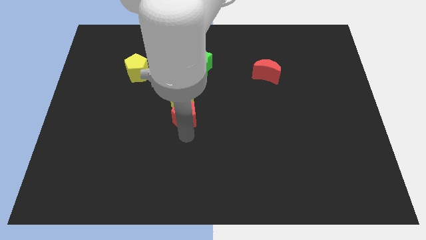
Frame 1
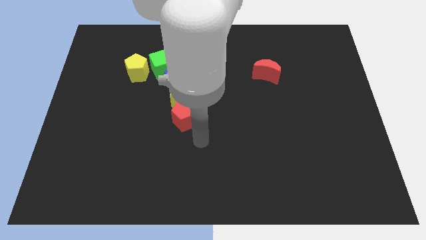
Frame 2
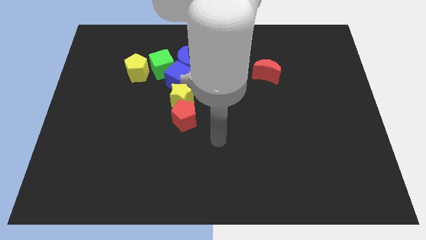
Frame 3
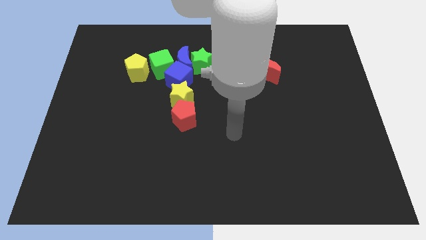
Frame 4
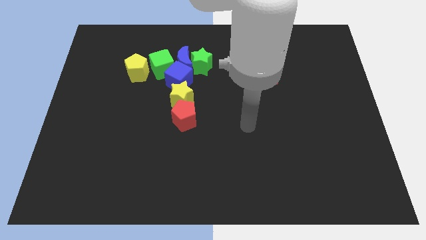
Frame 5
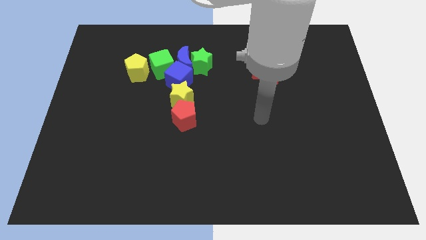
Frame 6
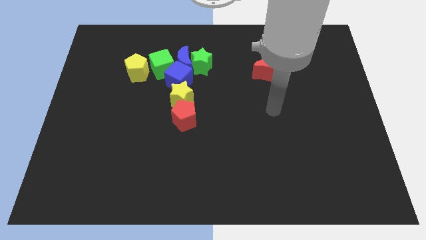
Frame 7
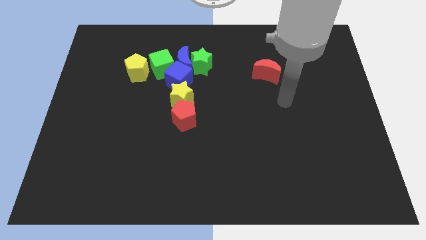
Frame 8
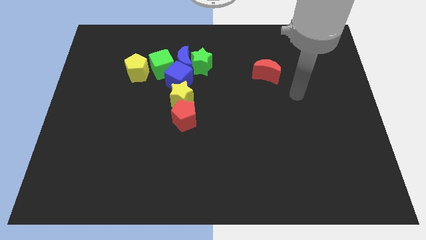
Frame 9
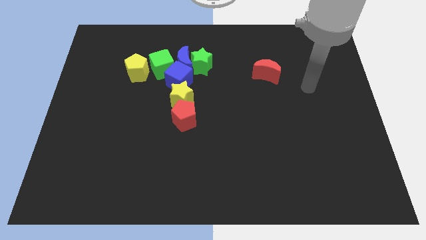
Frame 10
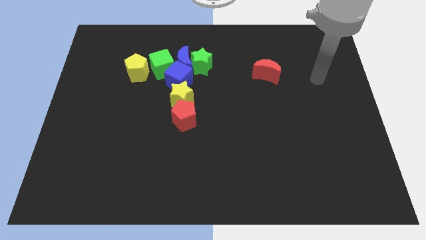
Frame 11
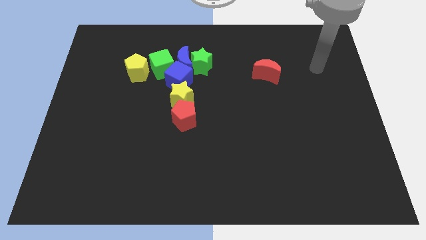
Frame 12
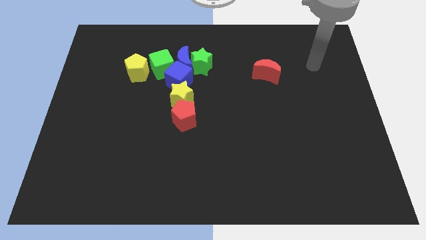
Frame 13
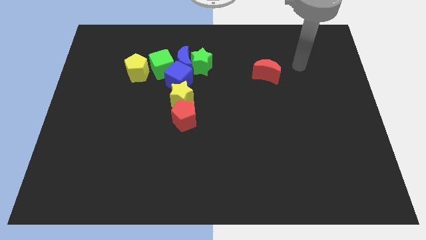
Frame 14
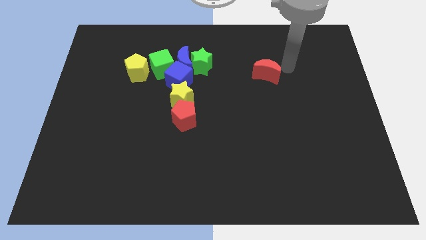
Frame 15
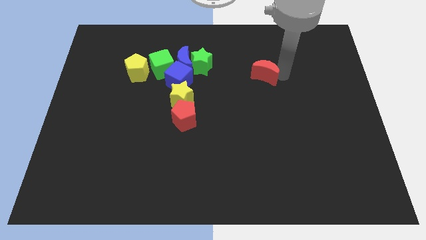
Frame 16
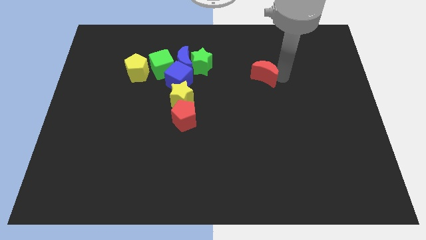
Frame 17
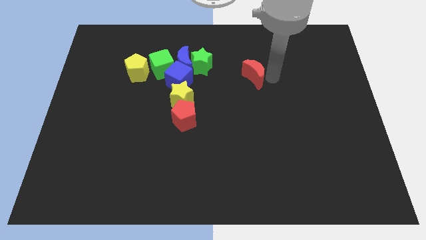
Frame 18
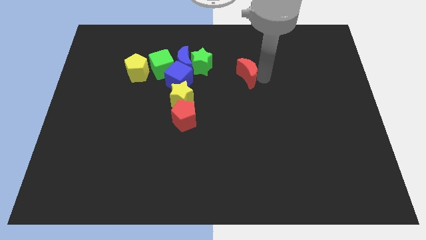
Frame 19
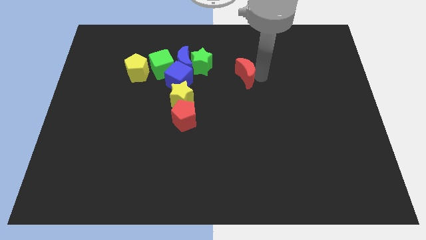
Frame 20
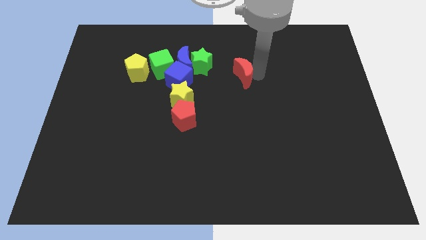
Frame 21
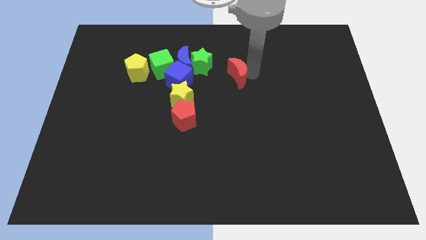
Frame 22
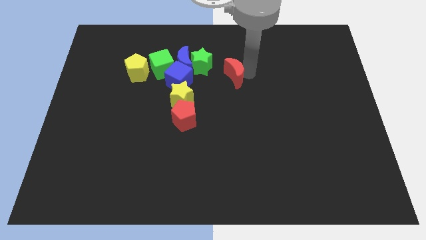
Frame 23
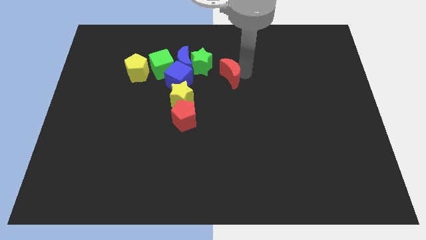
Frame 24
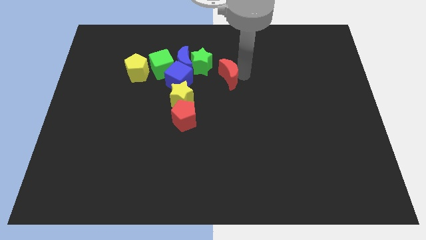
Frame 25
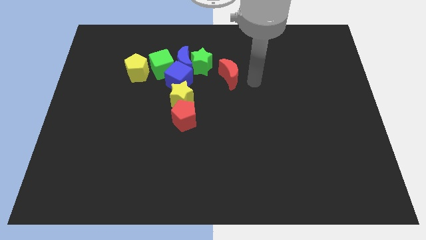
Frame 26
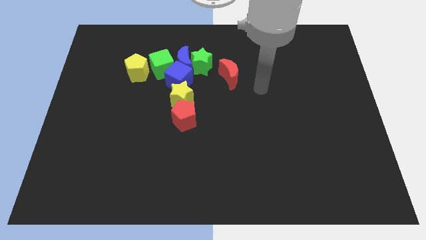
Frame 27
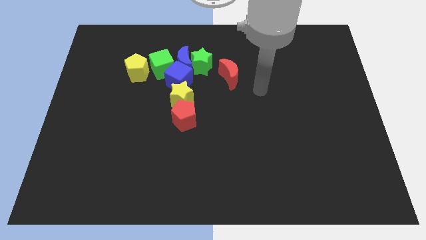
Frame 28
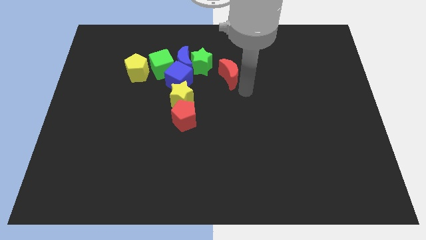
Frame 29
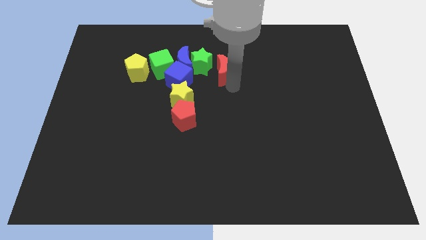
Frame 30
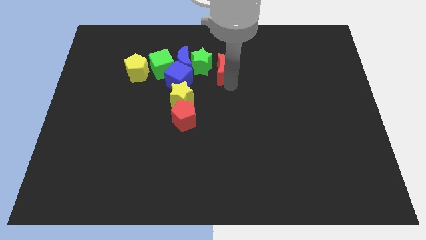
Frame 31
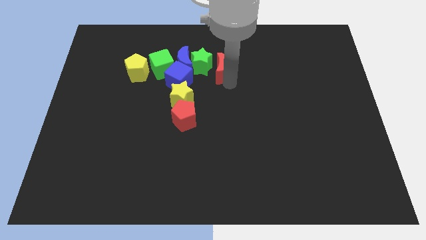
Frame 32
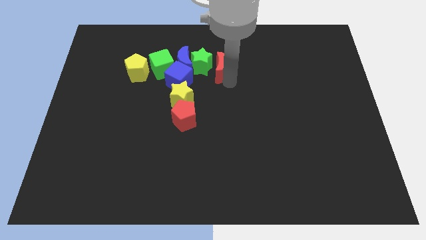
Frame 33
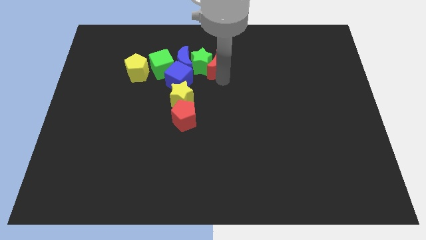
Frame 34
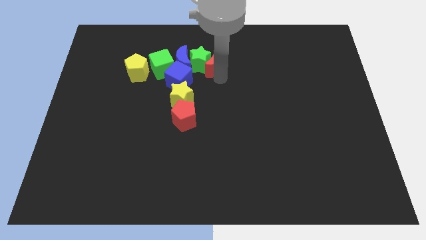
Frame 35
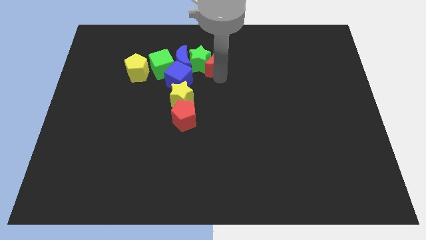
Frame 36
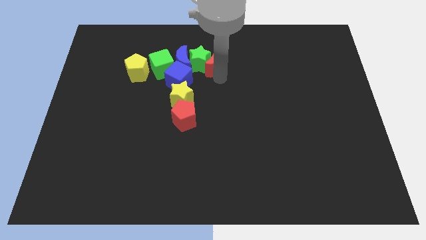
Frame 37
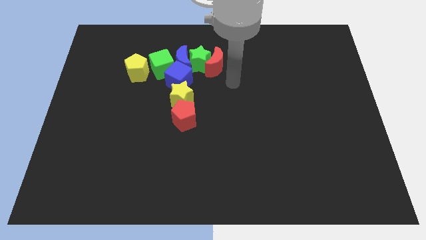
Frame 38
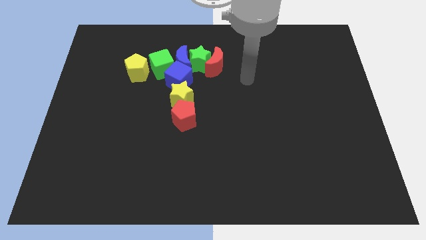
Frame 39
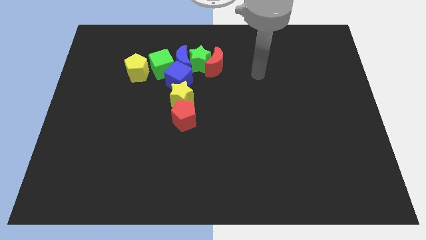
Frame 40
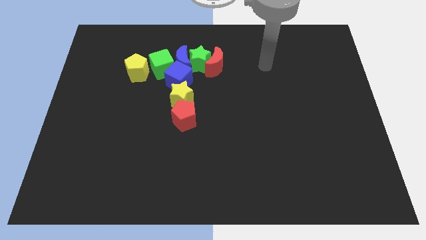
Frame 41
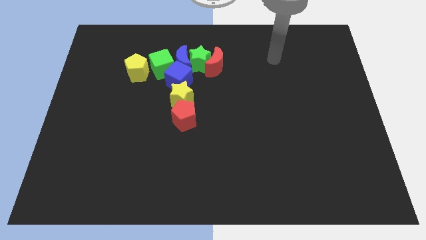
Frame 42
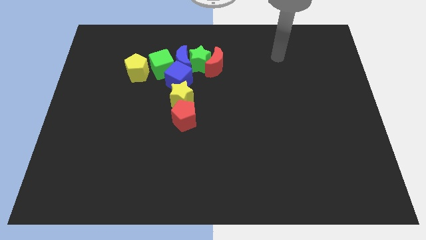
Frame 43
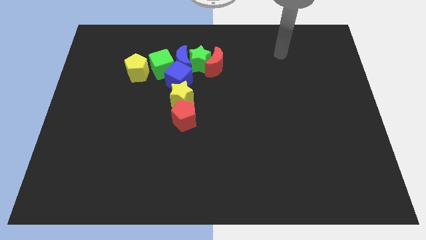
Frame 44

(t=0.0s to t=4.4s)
push the red crescent into the green star

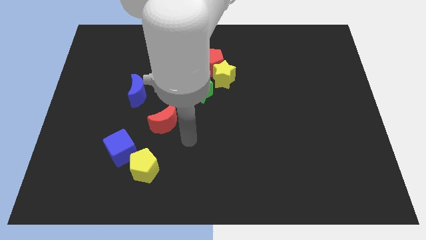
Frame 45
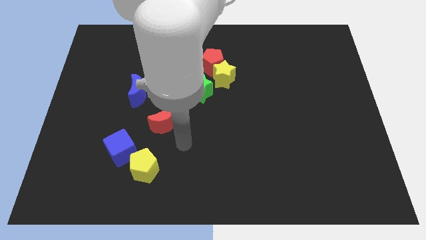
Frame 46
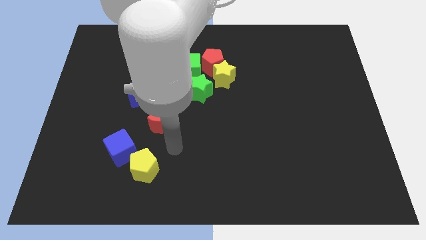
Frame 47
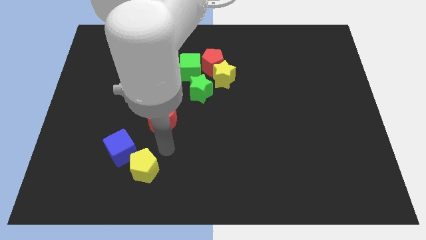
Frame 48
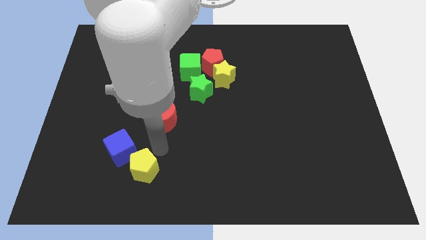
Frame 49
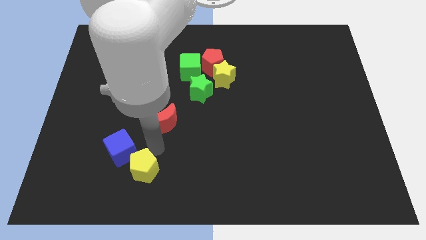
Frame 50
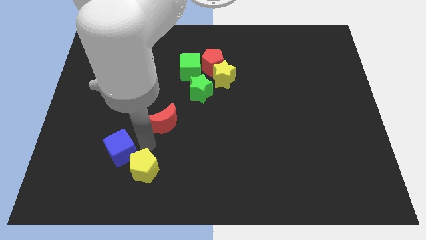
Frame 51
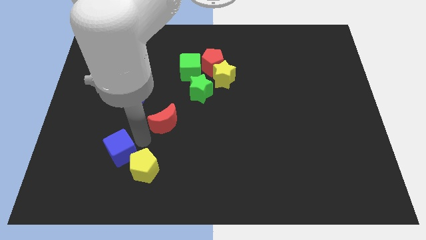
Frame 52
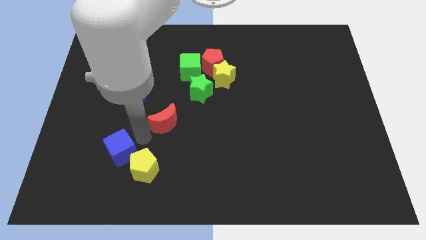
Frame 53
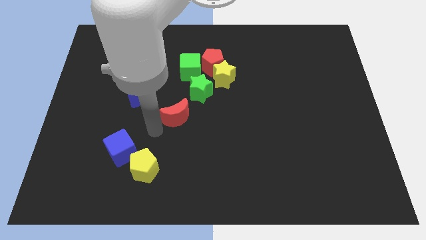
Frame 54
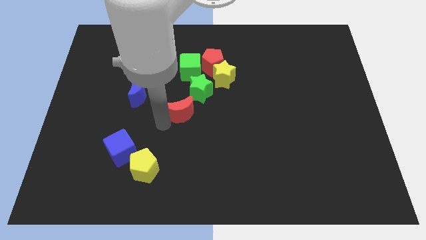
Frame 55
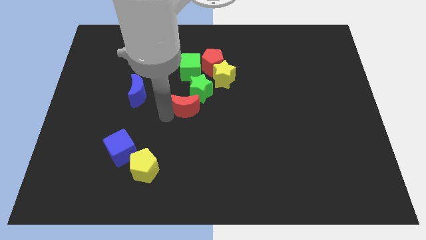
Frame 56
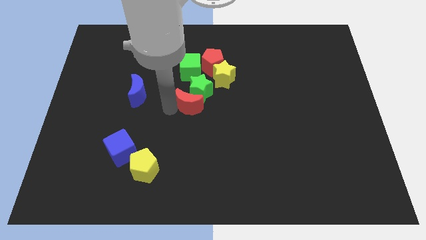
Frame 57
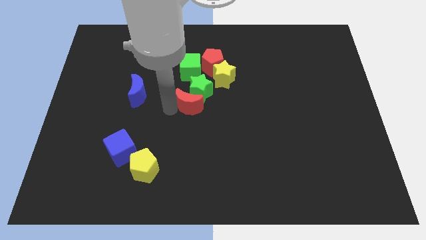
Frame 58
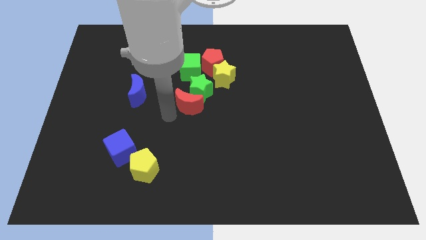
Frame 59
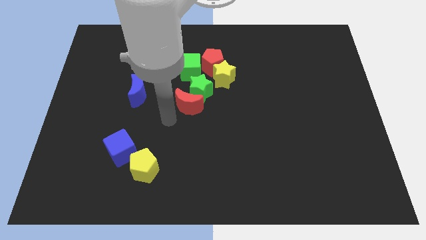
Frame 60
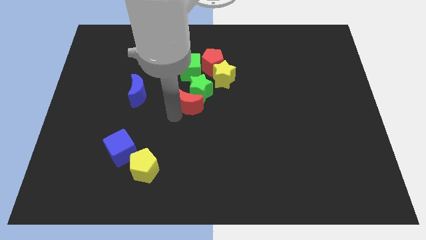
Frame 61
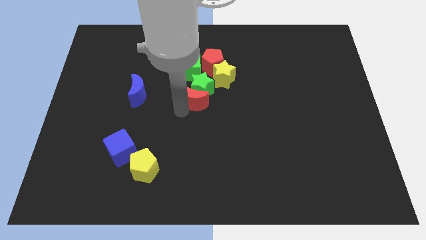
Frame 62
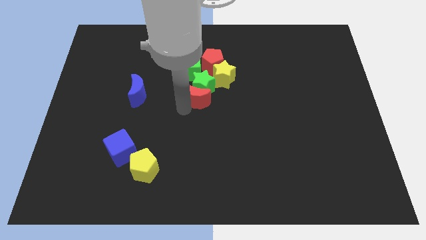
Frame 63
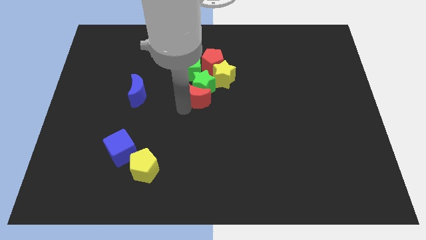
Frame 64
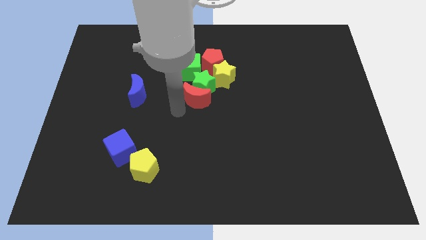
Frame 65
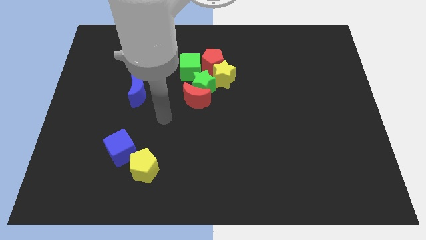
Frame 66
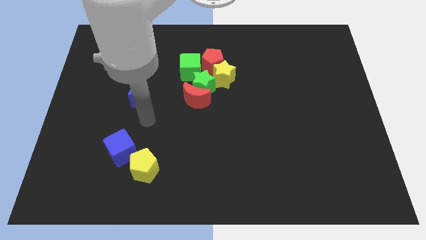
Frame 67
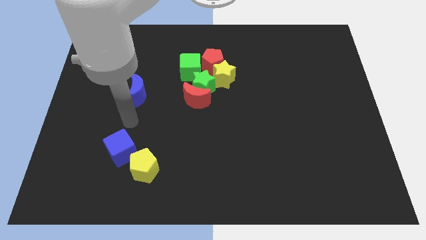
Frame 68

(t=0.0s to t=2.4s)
push the red crescent towards the bottom left side of the green star

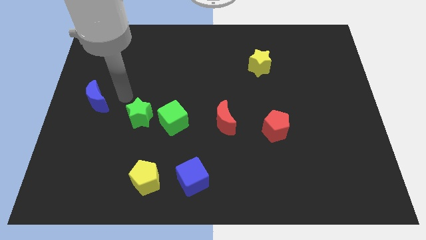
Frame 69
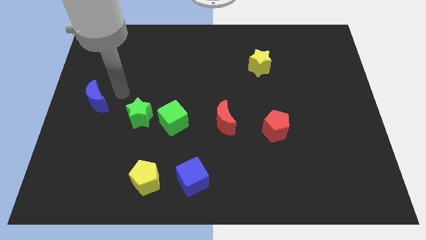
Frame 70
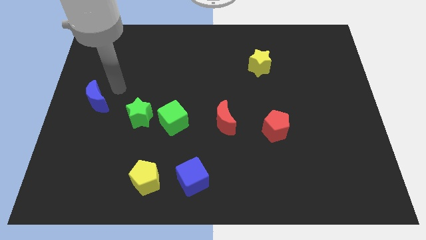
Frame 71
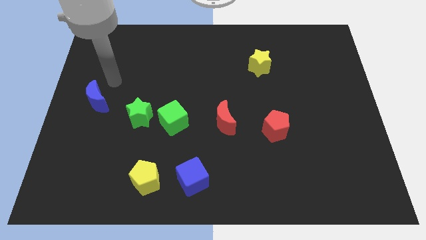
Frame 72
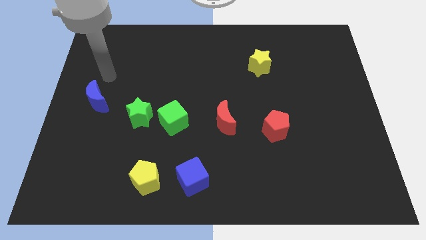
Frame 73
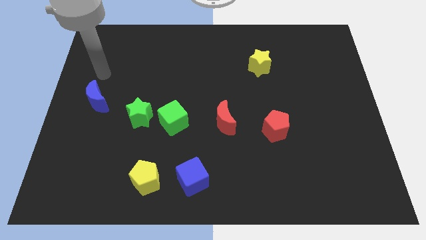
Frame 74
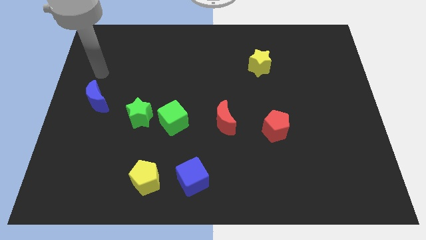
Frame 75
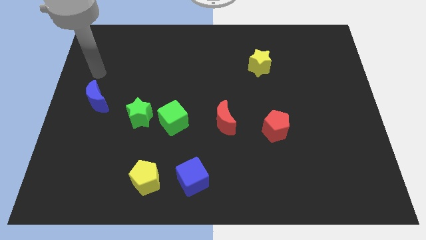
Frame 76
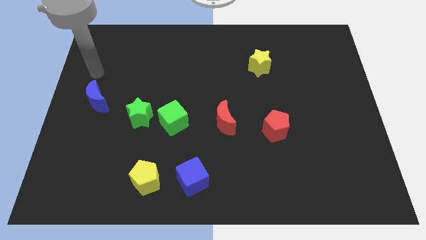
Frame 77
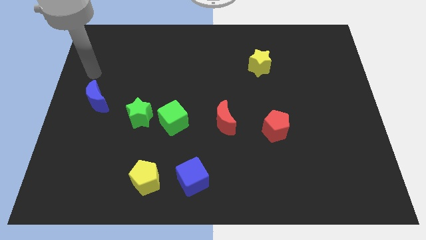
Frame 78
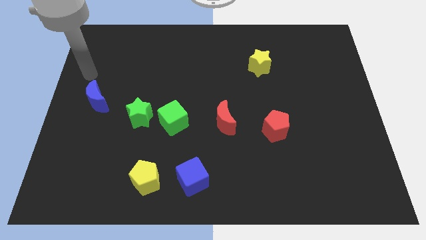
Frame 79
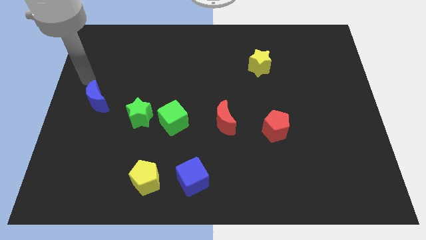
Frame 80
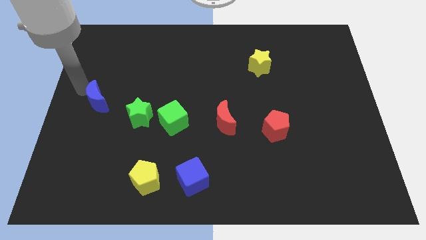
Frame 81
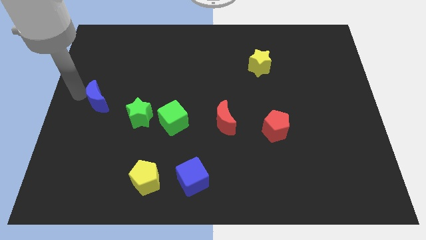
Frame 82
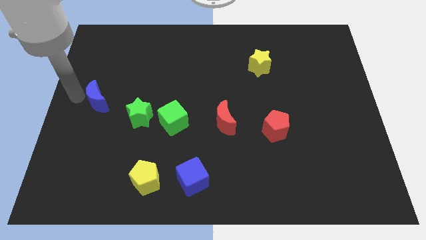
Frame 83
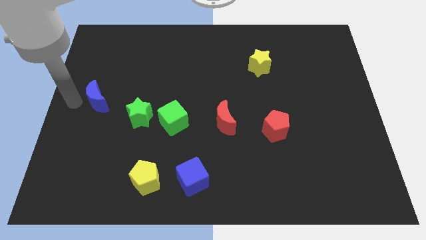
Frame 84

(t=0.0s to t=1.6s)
place your arm at the left of the blue crescent

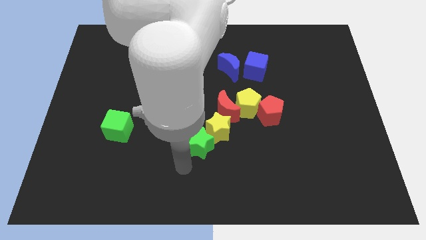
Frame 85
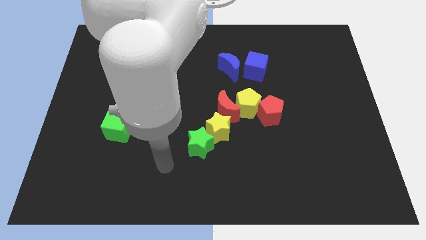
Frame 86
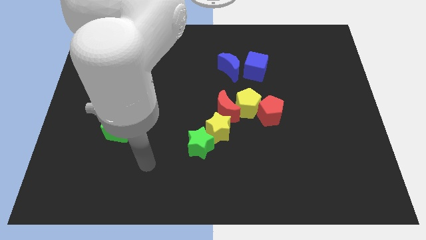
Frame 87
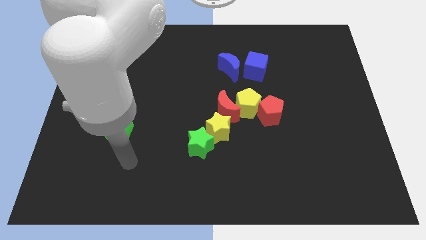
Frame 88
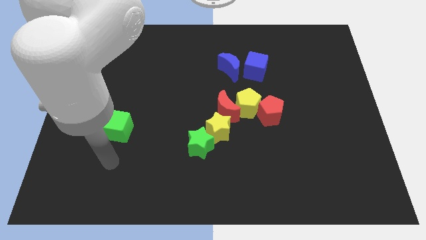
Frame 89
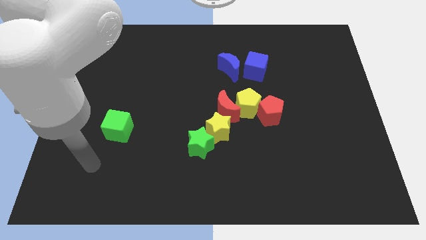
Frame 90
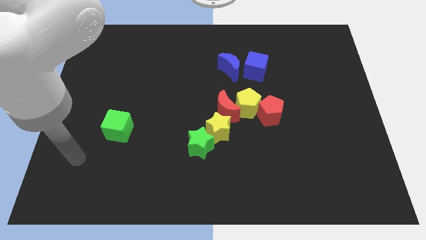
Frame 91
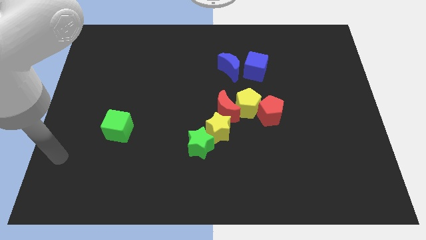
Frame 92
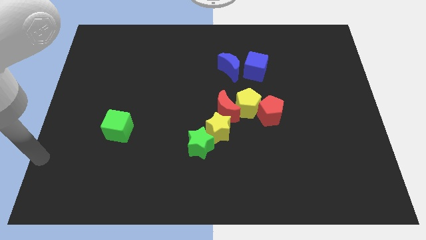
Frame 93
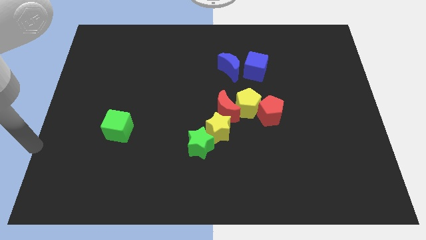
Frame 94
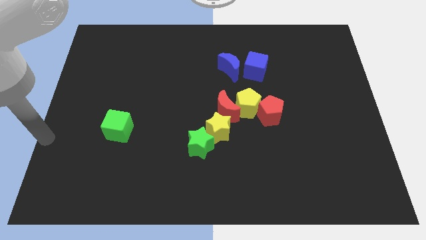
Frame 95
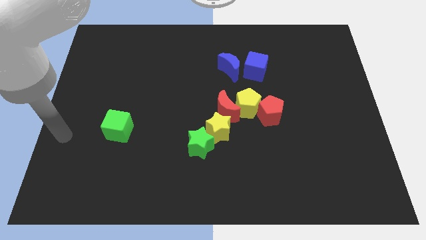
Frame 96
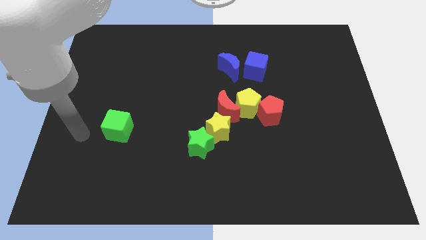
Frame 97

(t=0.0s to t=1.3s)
move the arm to the left of the green cube
